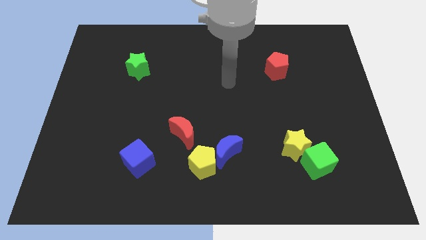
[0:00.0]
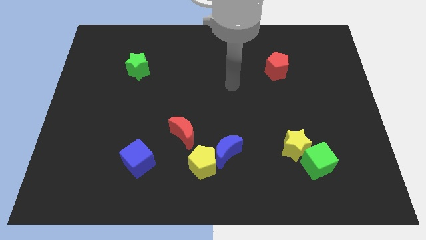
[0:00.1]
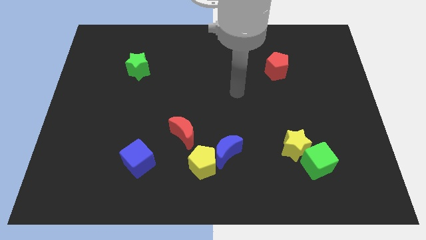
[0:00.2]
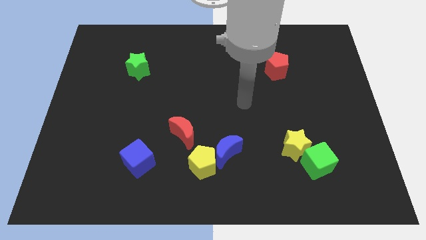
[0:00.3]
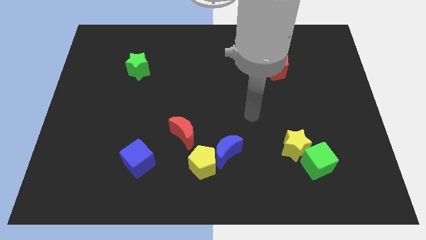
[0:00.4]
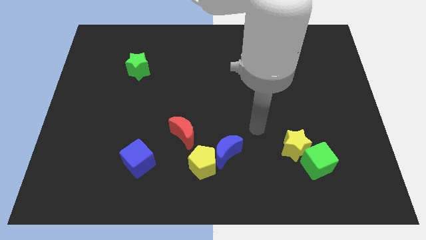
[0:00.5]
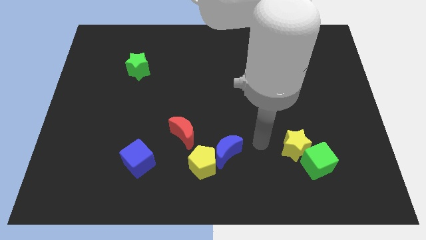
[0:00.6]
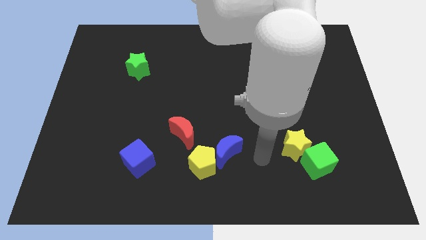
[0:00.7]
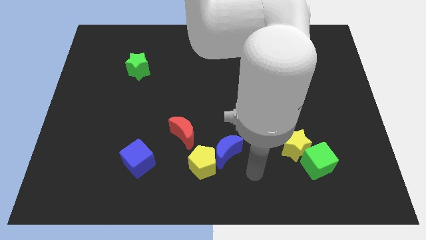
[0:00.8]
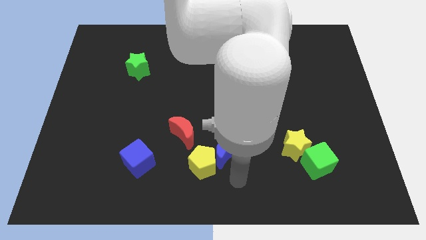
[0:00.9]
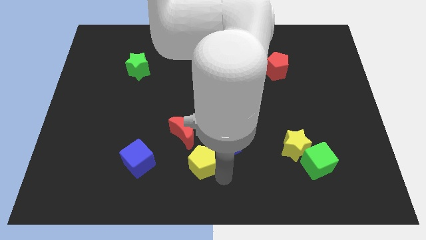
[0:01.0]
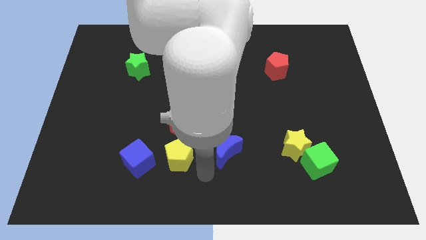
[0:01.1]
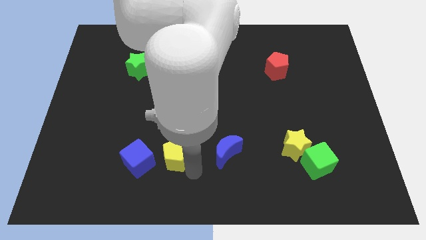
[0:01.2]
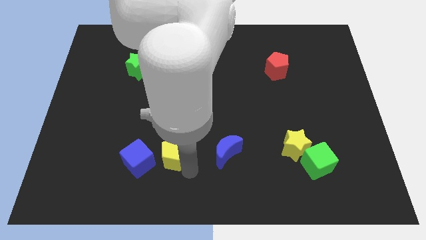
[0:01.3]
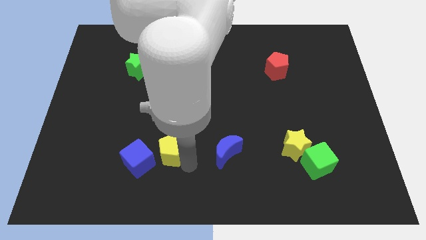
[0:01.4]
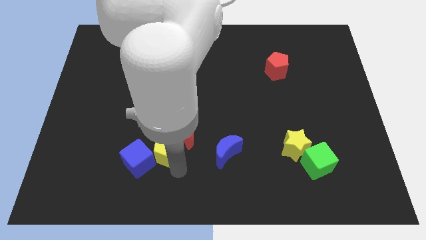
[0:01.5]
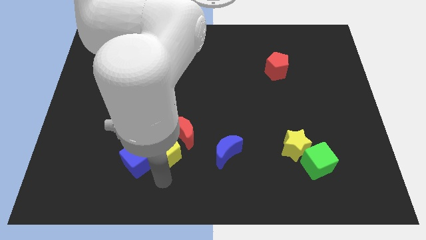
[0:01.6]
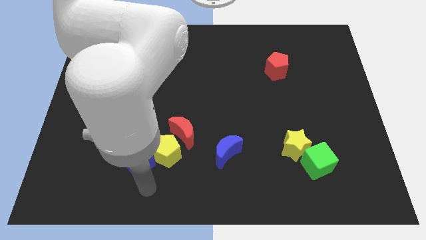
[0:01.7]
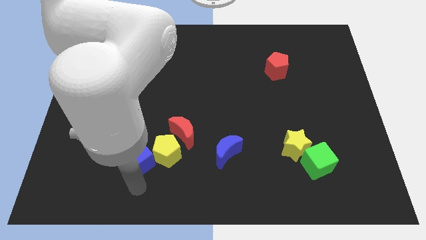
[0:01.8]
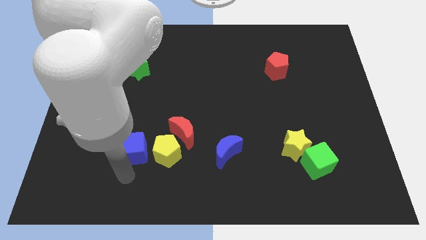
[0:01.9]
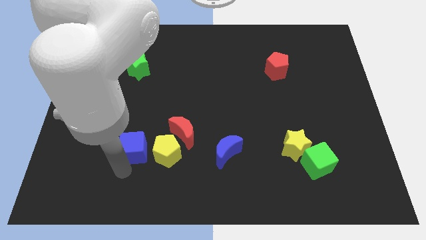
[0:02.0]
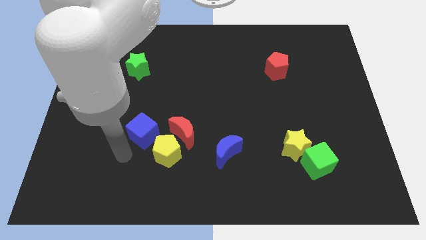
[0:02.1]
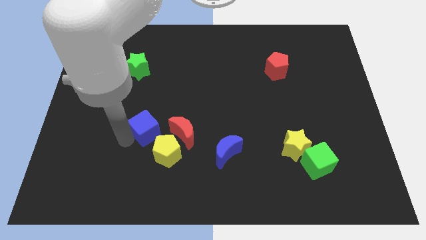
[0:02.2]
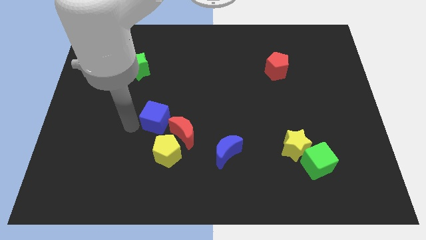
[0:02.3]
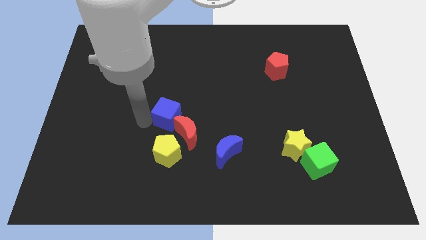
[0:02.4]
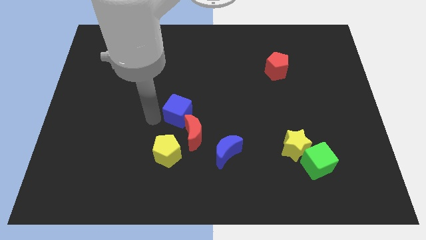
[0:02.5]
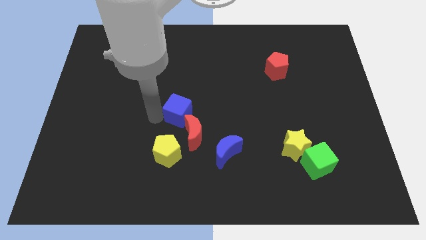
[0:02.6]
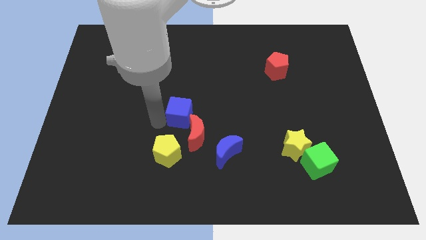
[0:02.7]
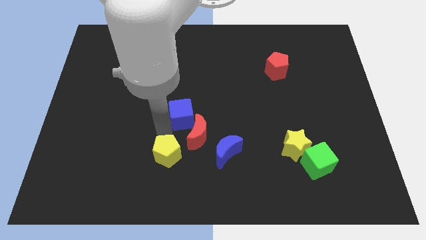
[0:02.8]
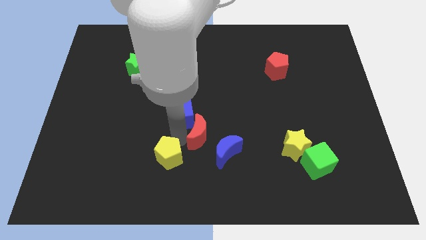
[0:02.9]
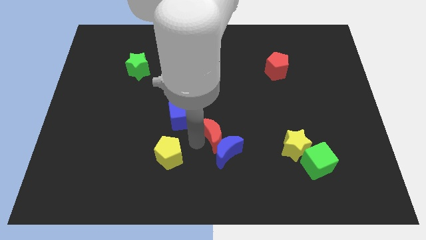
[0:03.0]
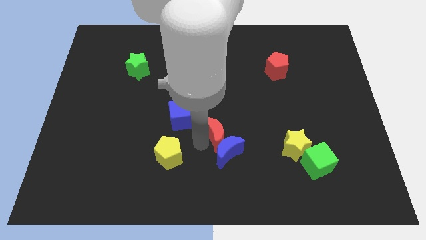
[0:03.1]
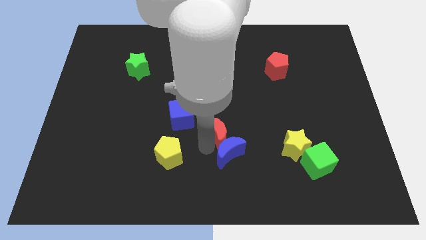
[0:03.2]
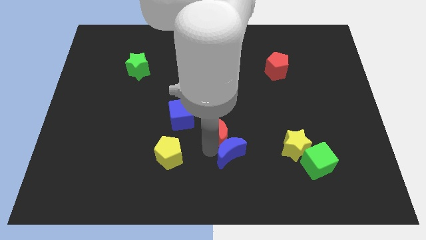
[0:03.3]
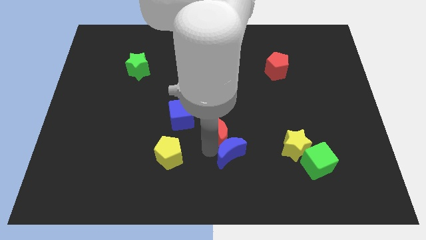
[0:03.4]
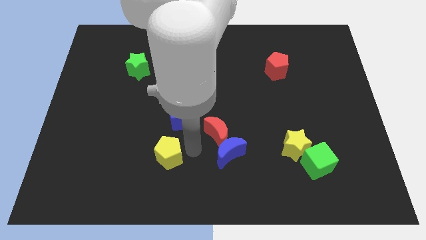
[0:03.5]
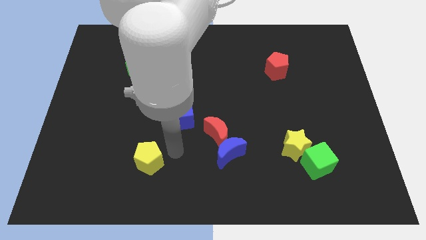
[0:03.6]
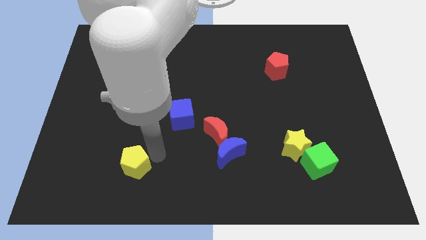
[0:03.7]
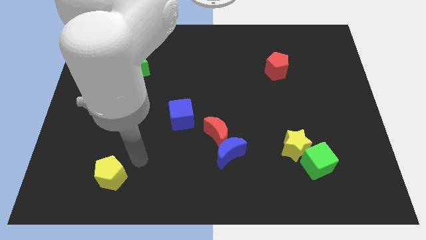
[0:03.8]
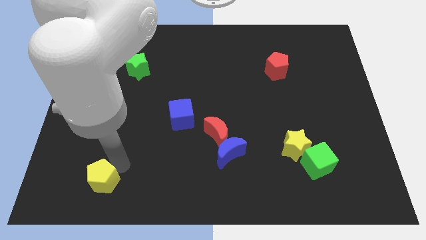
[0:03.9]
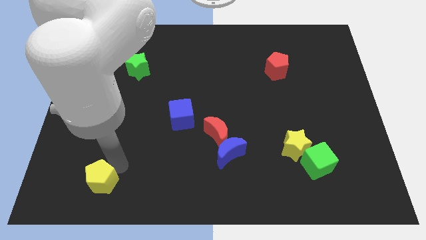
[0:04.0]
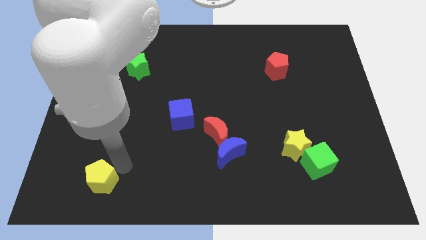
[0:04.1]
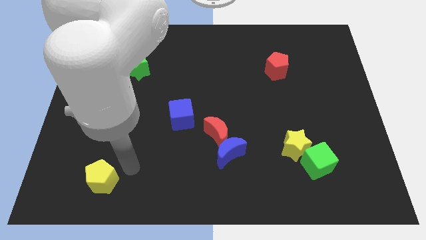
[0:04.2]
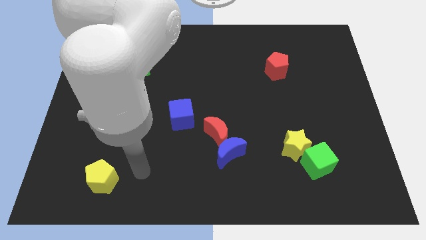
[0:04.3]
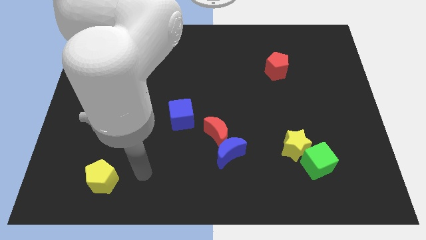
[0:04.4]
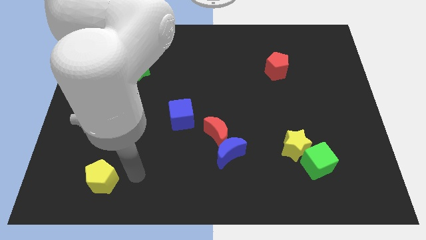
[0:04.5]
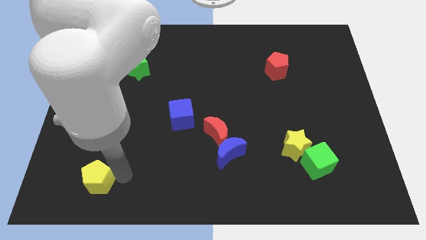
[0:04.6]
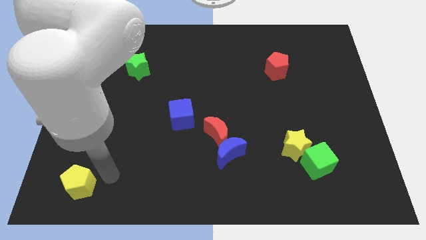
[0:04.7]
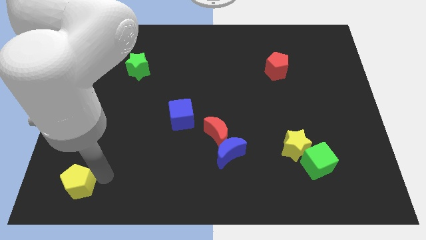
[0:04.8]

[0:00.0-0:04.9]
move the yellow pentagon towards the bottom left of the board

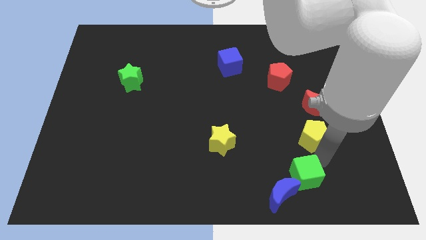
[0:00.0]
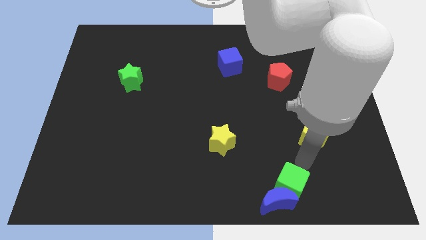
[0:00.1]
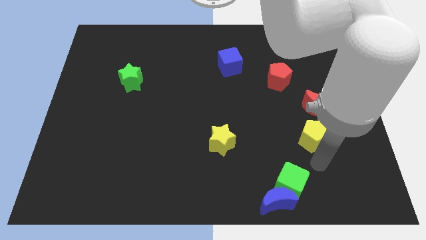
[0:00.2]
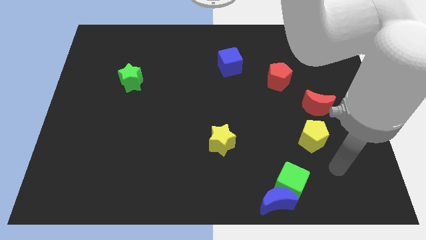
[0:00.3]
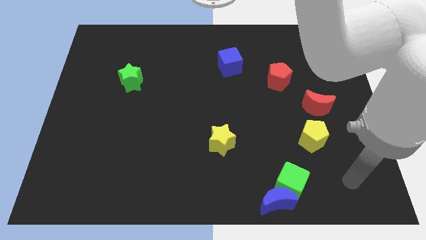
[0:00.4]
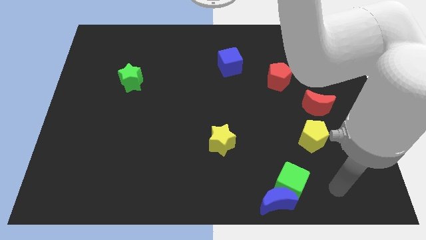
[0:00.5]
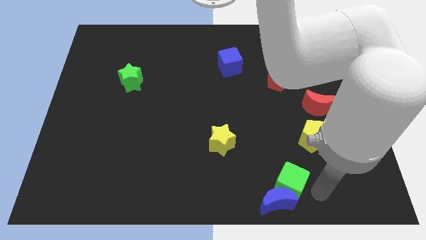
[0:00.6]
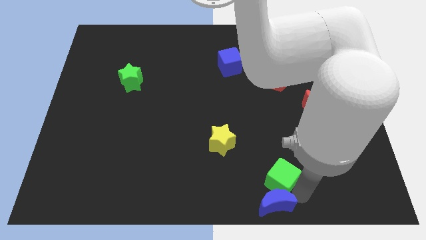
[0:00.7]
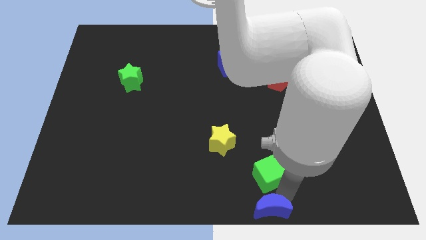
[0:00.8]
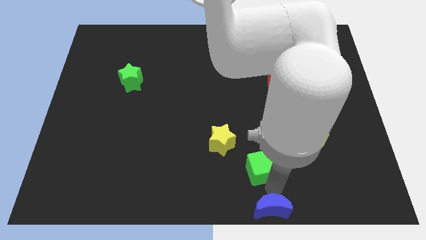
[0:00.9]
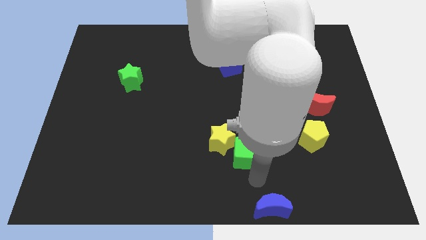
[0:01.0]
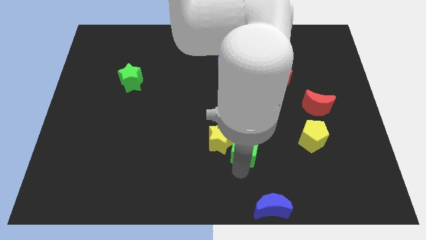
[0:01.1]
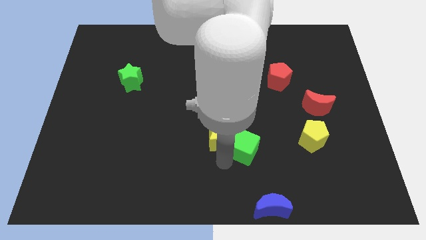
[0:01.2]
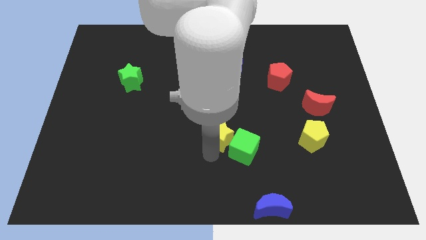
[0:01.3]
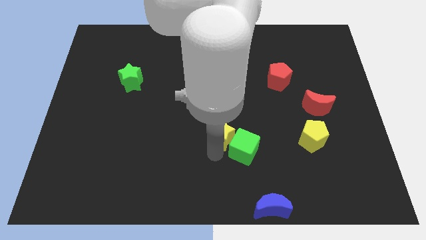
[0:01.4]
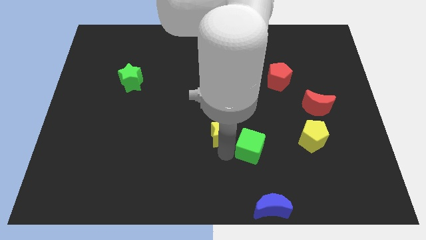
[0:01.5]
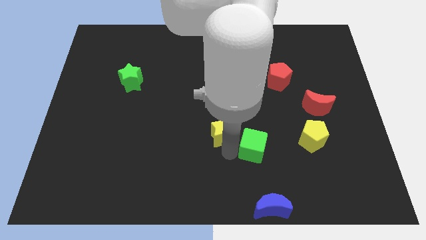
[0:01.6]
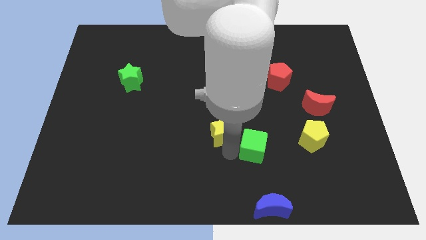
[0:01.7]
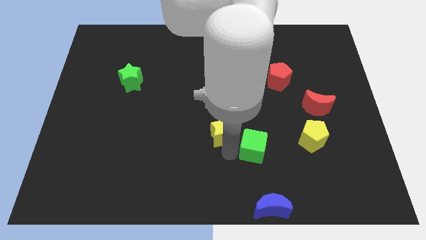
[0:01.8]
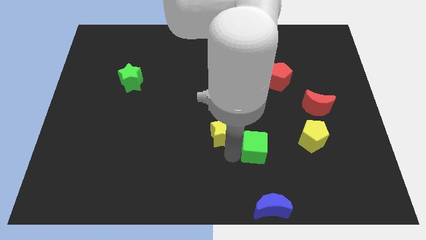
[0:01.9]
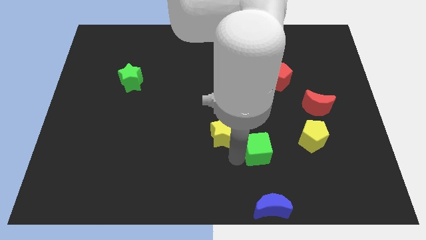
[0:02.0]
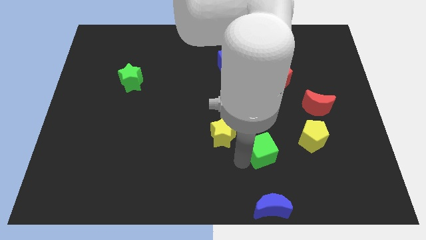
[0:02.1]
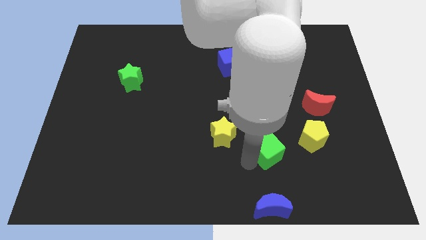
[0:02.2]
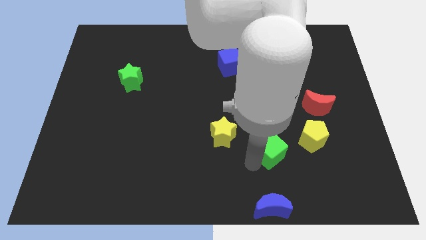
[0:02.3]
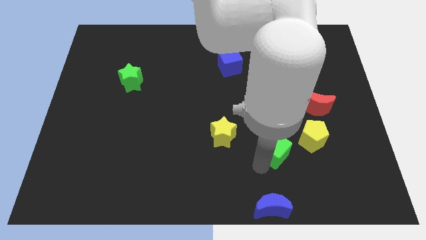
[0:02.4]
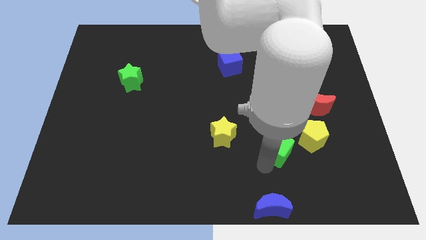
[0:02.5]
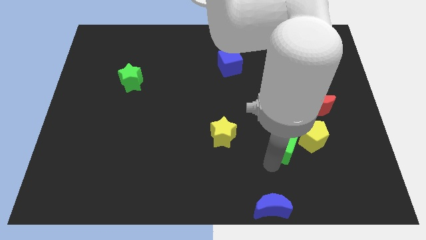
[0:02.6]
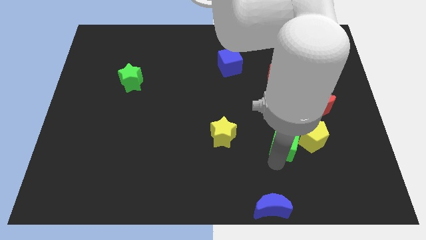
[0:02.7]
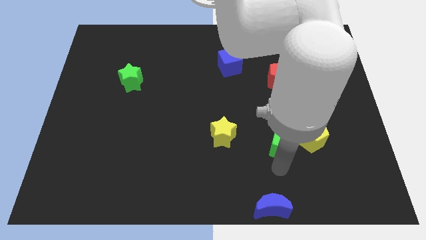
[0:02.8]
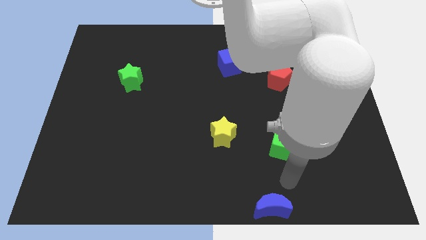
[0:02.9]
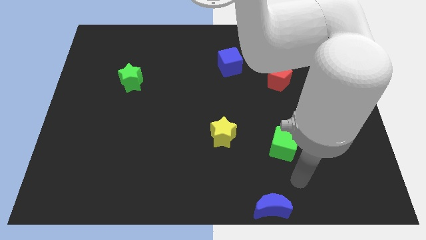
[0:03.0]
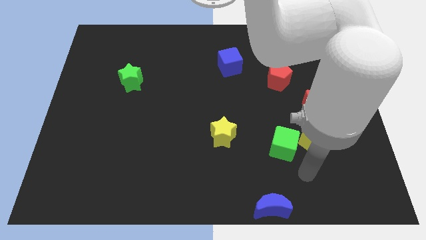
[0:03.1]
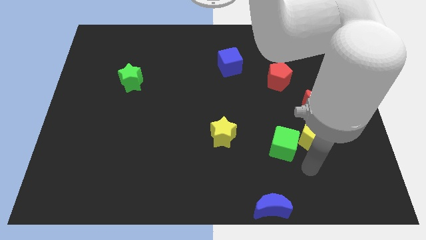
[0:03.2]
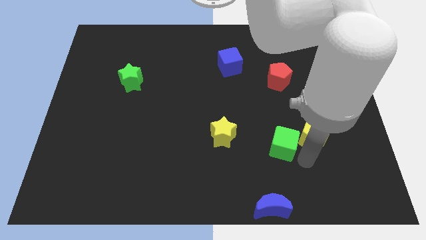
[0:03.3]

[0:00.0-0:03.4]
push green cube into yellow pentagon

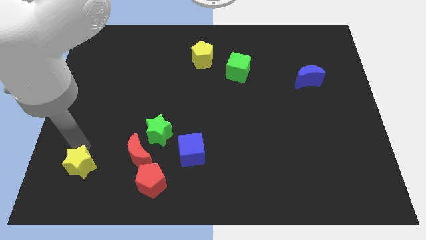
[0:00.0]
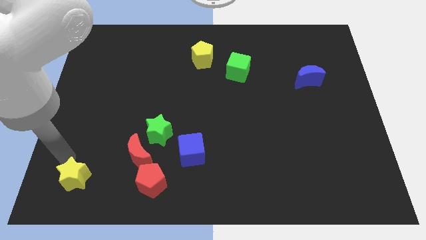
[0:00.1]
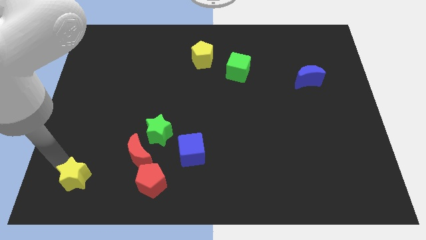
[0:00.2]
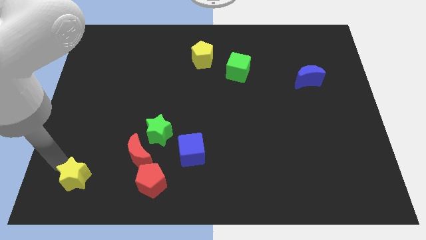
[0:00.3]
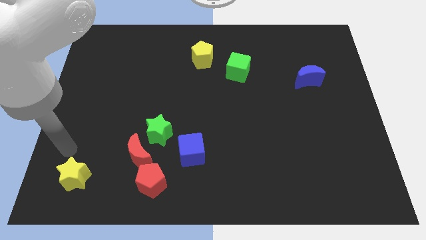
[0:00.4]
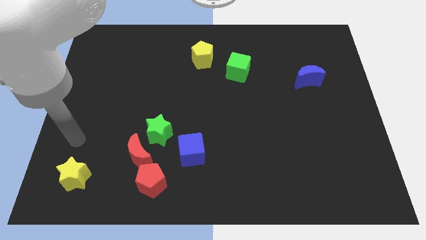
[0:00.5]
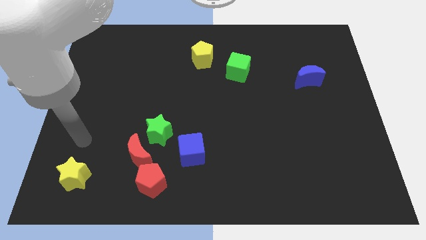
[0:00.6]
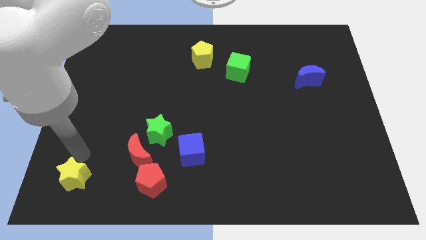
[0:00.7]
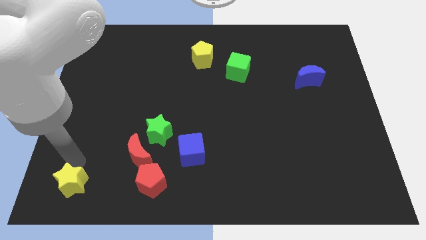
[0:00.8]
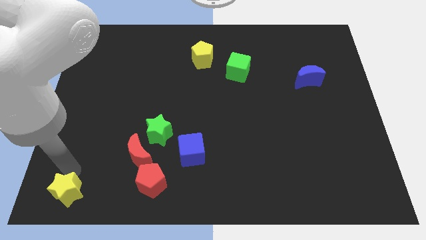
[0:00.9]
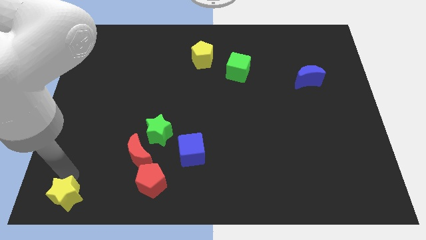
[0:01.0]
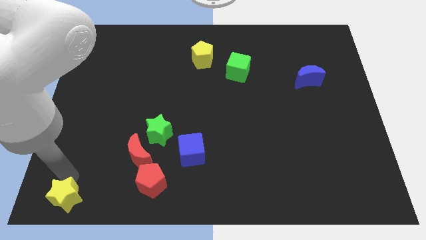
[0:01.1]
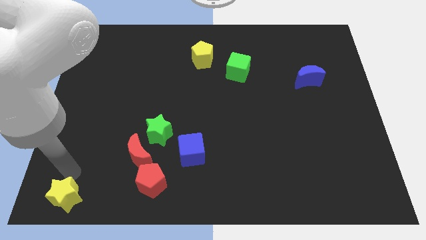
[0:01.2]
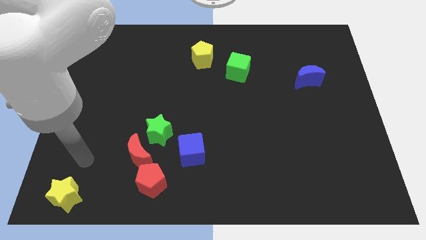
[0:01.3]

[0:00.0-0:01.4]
push the yellow star slightly downwards
